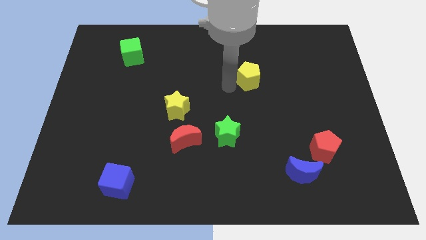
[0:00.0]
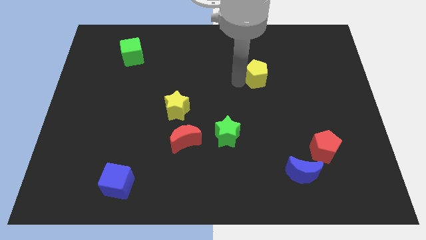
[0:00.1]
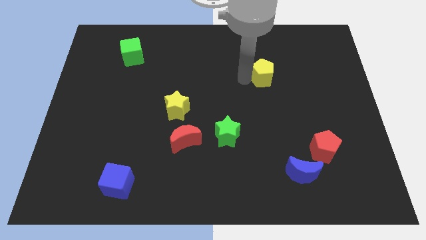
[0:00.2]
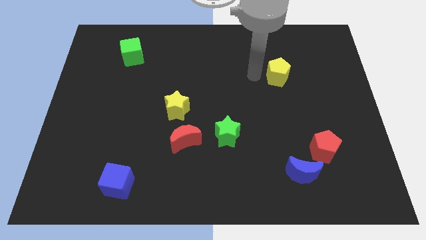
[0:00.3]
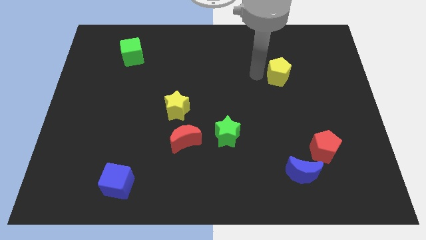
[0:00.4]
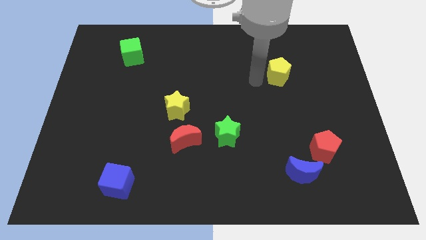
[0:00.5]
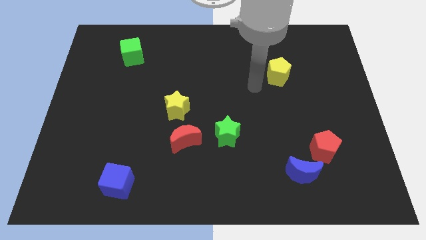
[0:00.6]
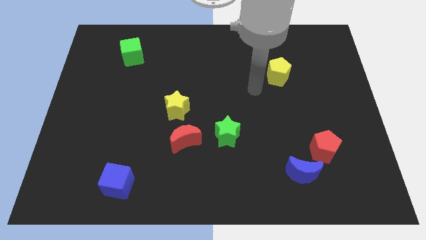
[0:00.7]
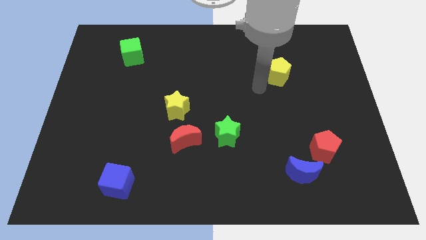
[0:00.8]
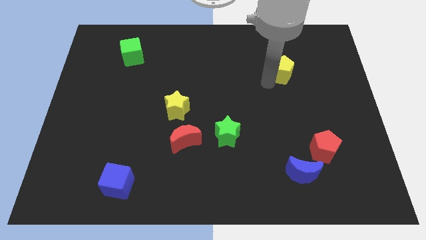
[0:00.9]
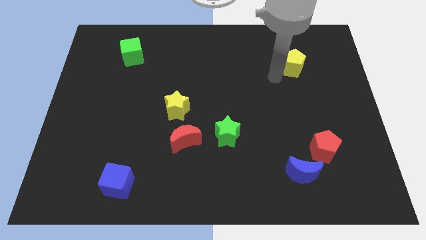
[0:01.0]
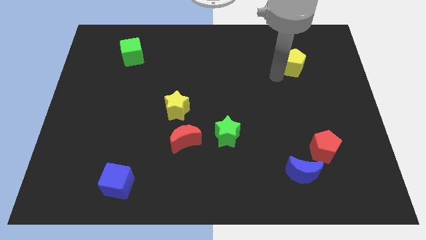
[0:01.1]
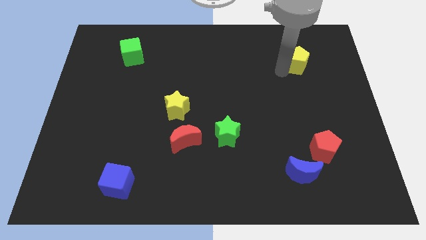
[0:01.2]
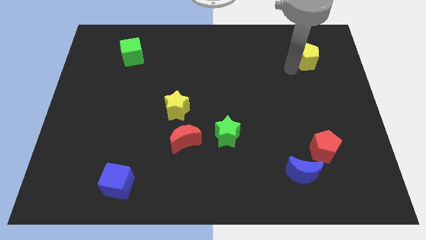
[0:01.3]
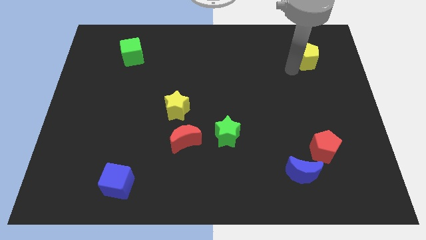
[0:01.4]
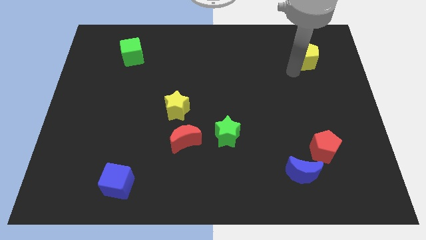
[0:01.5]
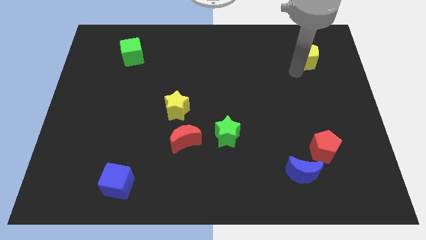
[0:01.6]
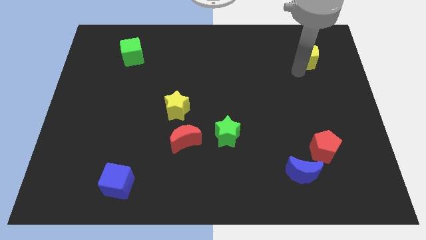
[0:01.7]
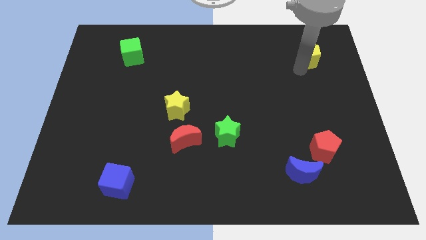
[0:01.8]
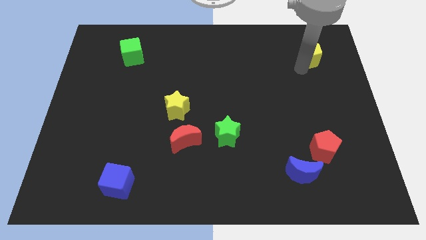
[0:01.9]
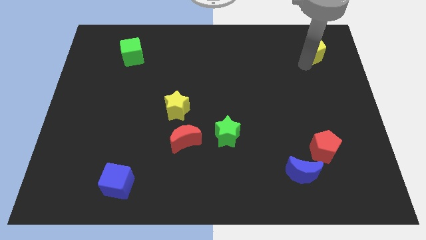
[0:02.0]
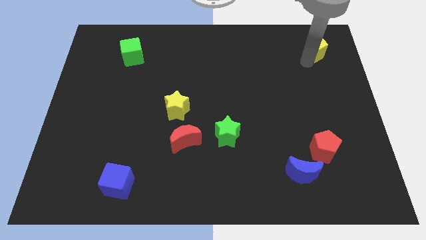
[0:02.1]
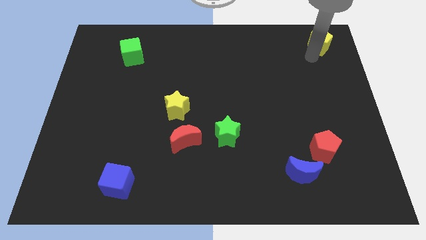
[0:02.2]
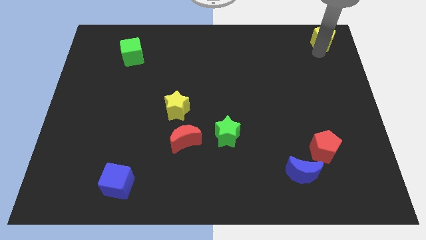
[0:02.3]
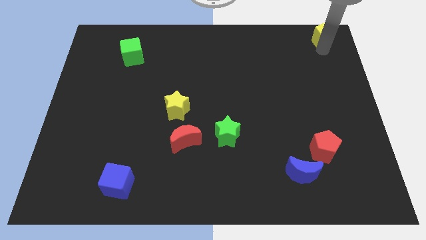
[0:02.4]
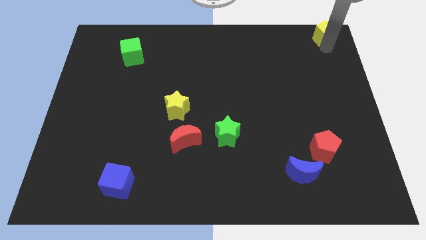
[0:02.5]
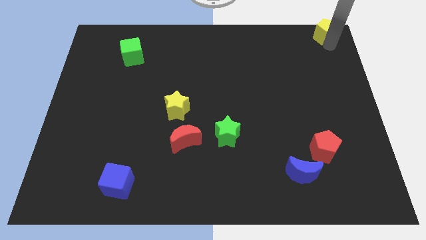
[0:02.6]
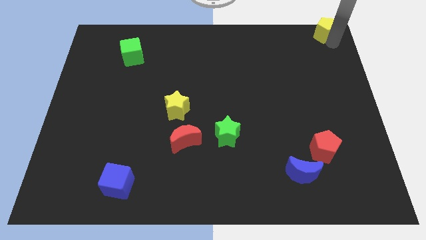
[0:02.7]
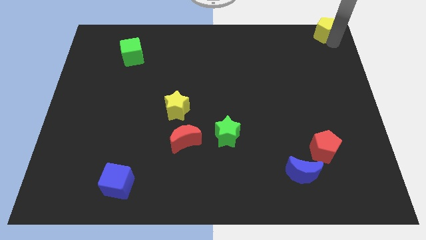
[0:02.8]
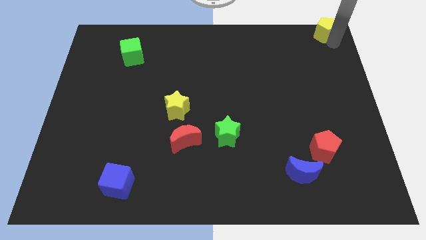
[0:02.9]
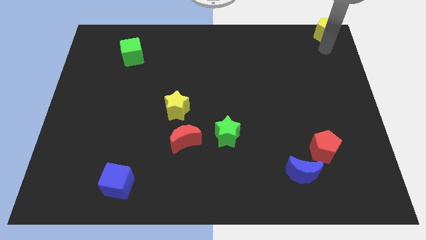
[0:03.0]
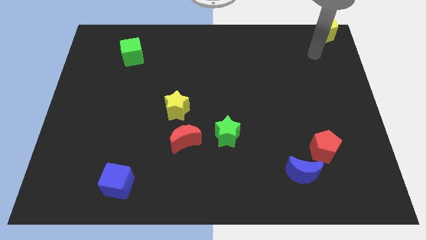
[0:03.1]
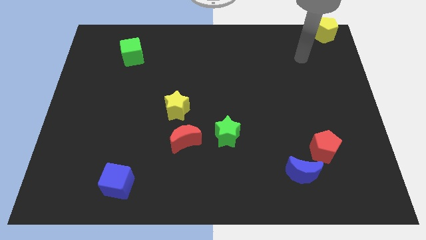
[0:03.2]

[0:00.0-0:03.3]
push the yellow pentagon to the top right corner of the board

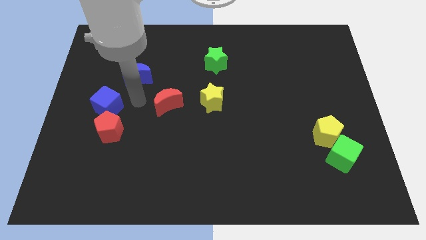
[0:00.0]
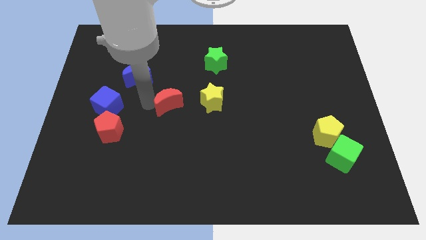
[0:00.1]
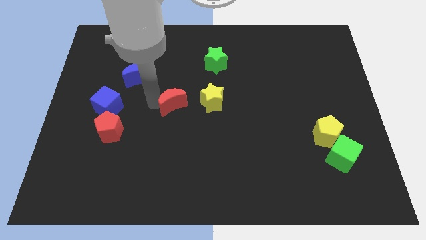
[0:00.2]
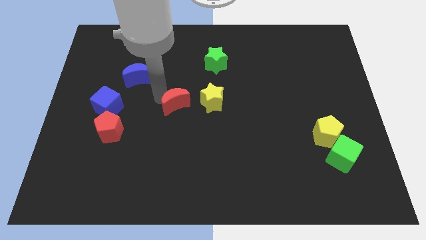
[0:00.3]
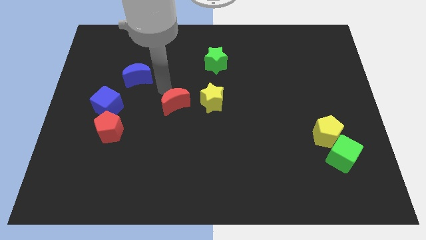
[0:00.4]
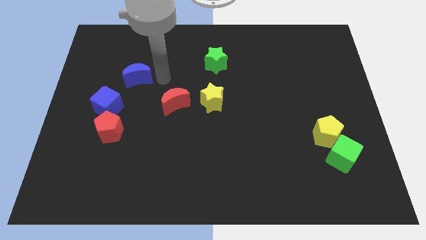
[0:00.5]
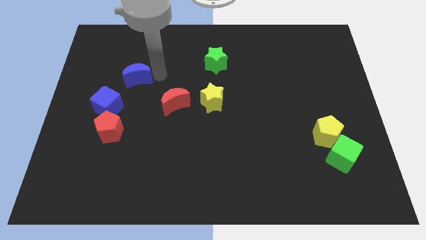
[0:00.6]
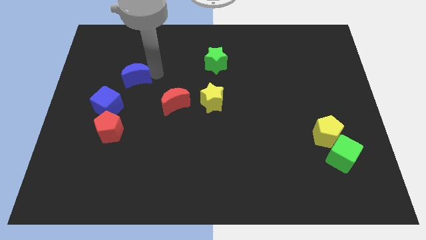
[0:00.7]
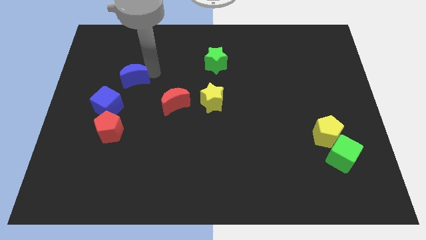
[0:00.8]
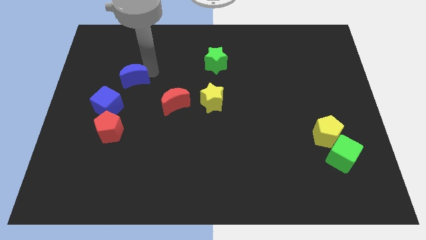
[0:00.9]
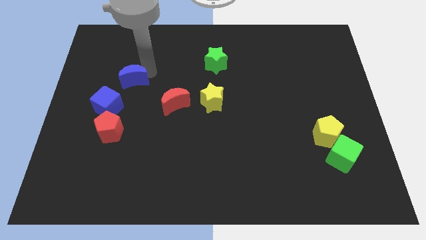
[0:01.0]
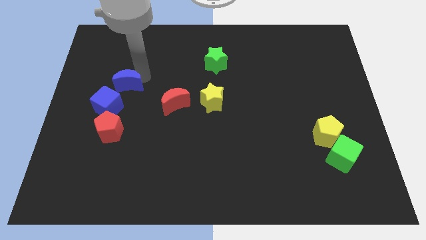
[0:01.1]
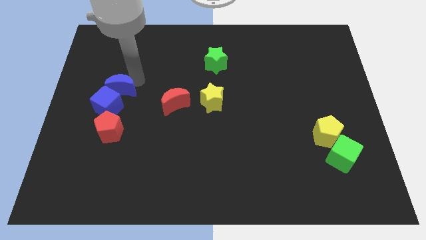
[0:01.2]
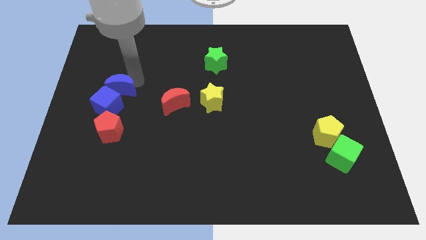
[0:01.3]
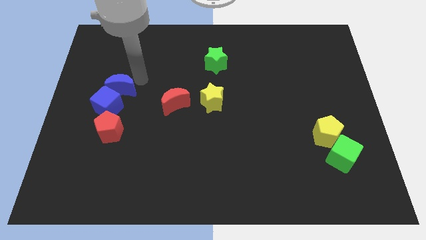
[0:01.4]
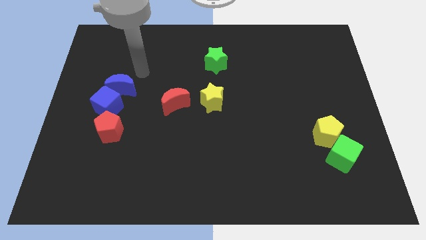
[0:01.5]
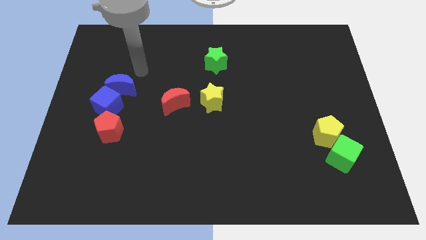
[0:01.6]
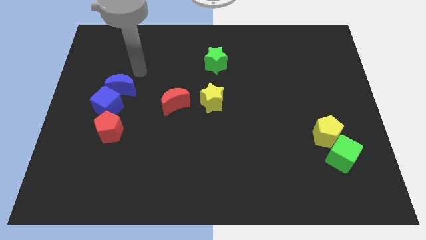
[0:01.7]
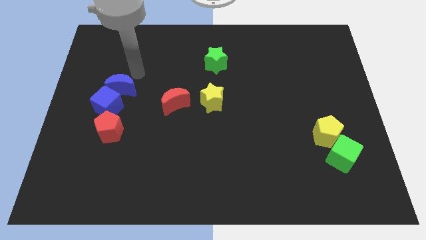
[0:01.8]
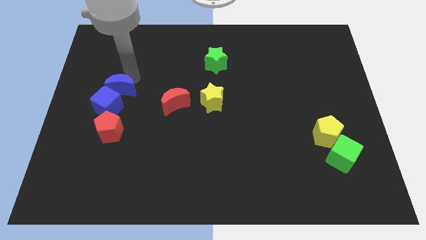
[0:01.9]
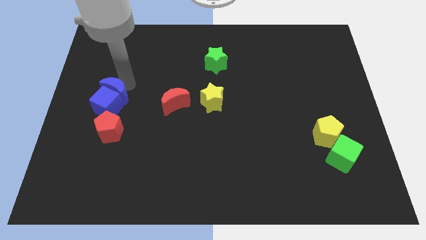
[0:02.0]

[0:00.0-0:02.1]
push the blue moon into blue cube on top

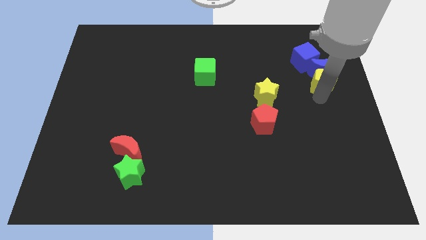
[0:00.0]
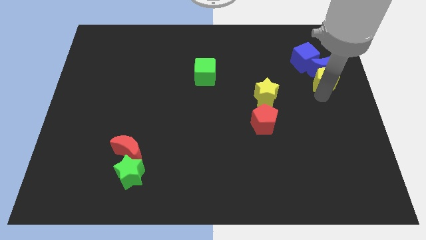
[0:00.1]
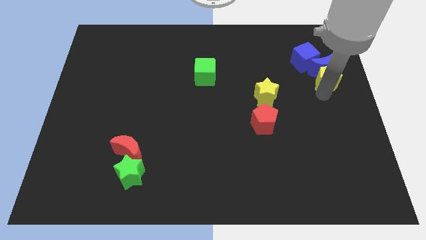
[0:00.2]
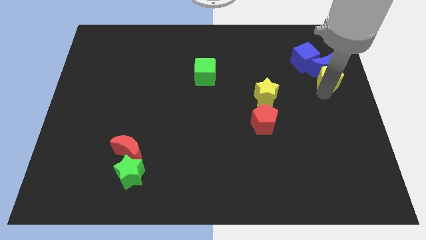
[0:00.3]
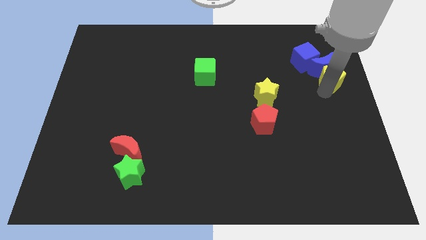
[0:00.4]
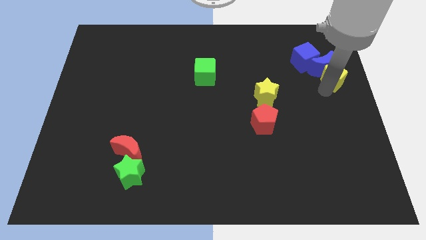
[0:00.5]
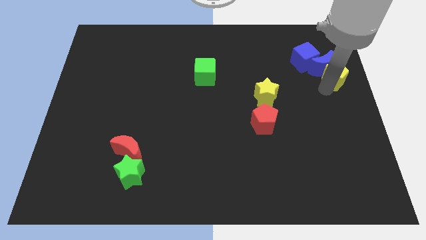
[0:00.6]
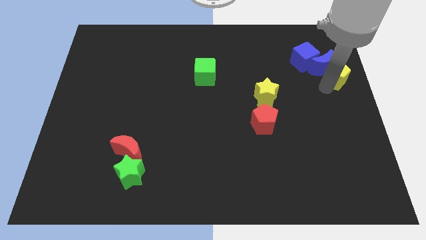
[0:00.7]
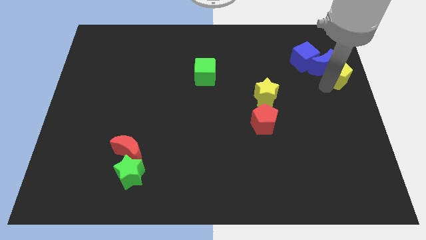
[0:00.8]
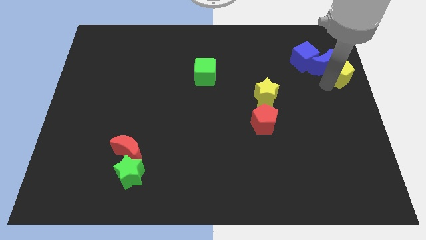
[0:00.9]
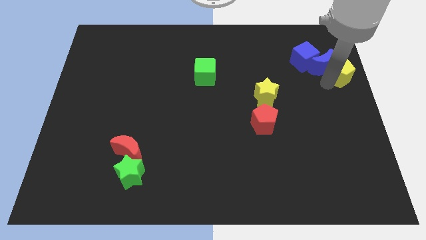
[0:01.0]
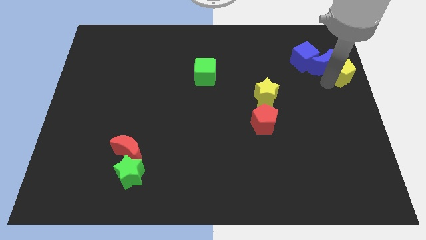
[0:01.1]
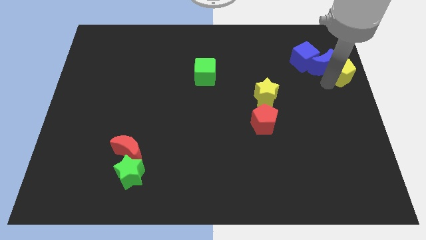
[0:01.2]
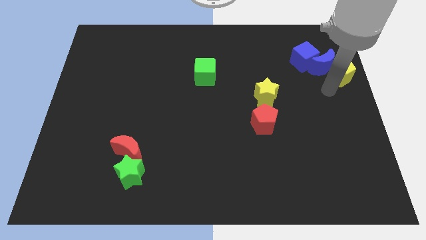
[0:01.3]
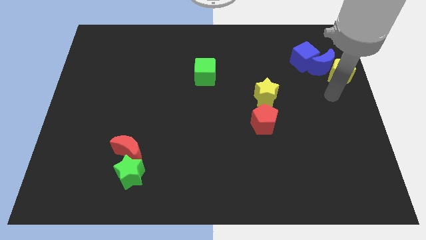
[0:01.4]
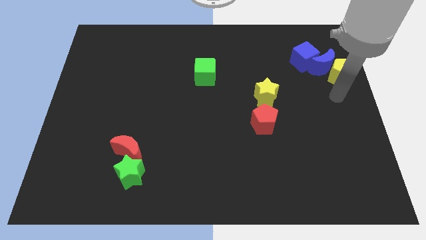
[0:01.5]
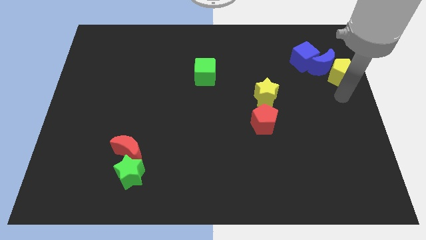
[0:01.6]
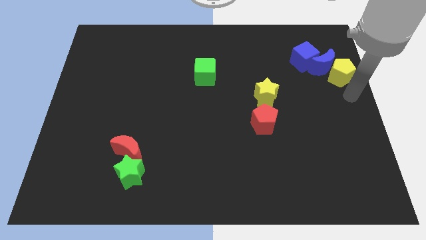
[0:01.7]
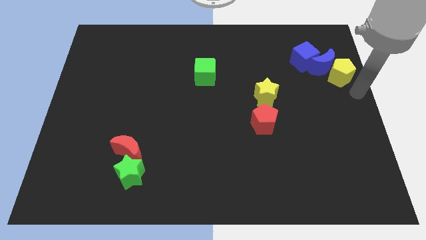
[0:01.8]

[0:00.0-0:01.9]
push the yellow pentagon towards the top right of the board

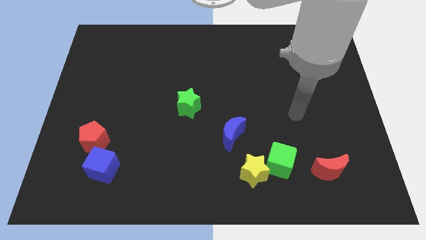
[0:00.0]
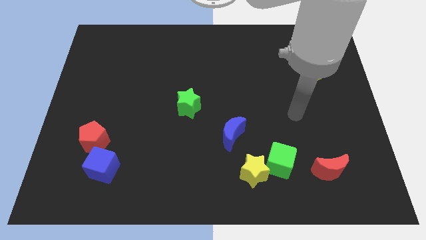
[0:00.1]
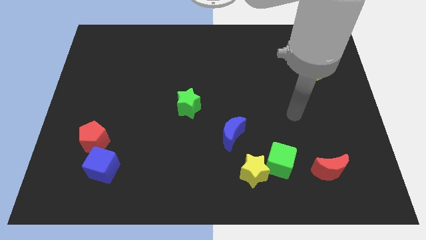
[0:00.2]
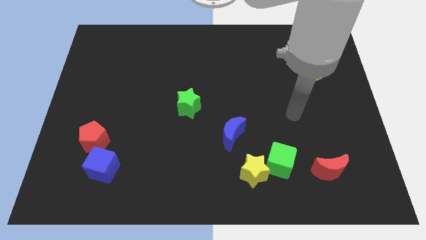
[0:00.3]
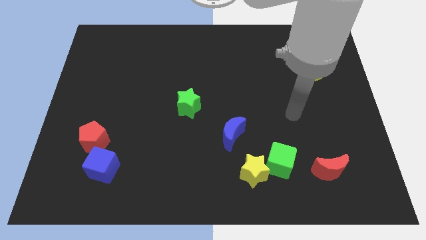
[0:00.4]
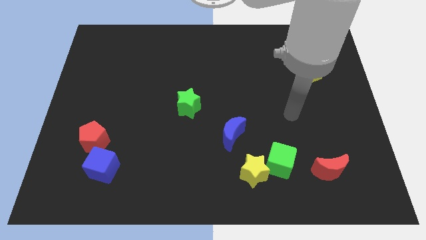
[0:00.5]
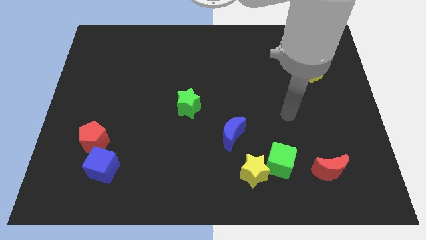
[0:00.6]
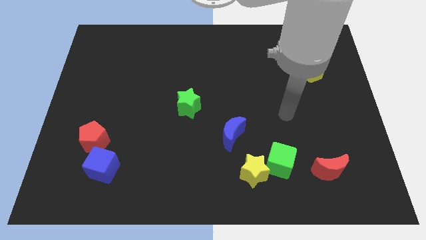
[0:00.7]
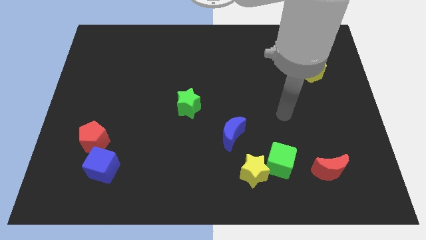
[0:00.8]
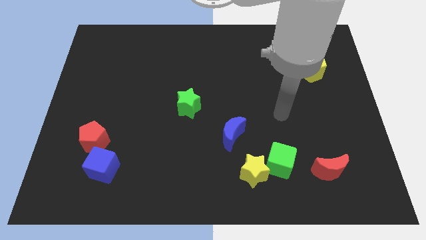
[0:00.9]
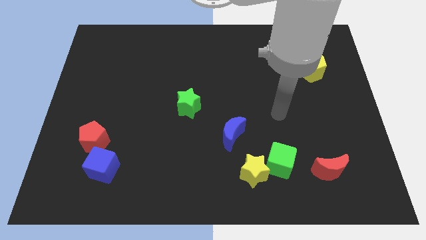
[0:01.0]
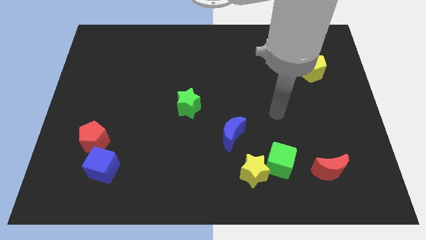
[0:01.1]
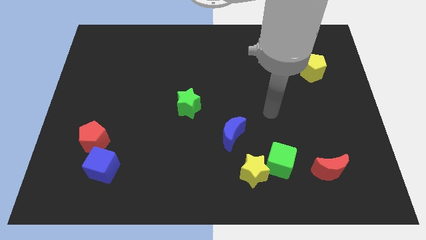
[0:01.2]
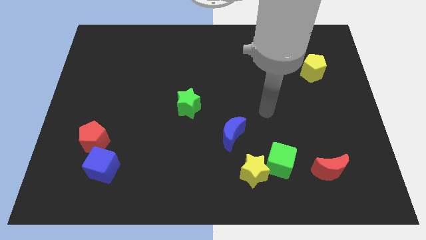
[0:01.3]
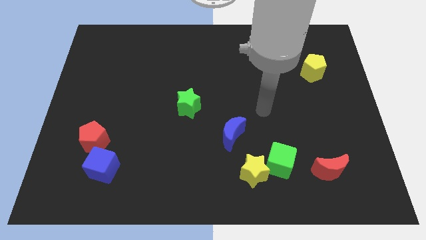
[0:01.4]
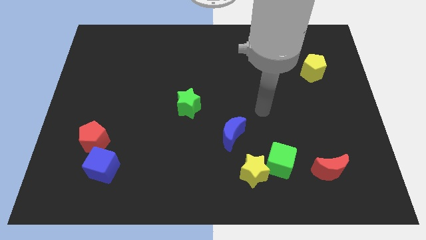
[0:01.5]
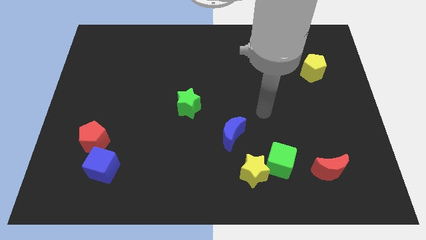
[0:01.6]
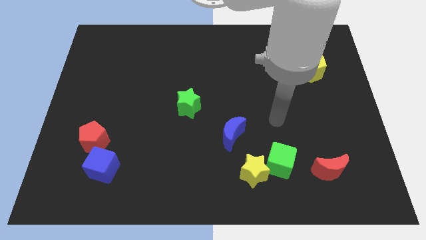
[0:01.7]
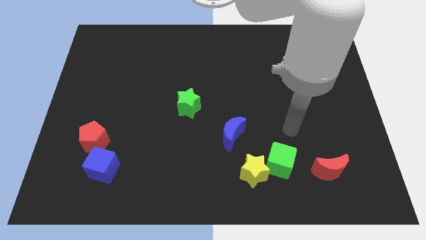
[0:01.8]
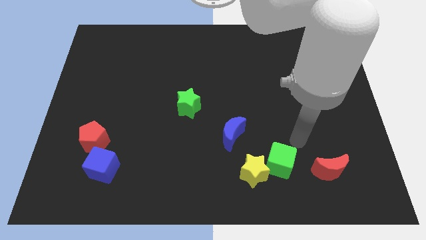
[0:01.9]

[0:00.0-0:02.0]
move your arm to the top of green cube
